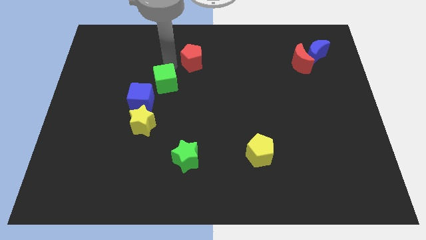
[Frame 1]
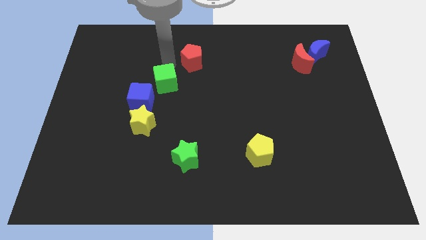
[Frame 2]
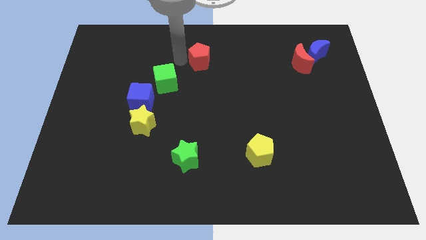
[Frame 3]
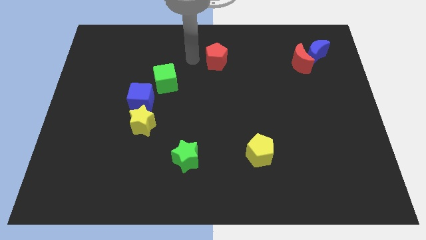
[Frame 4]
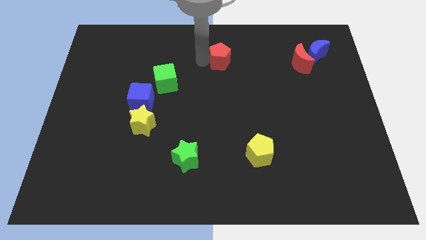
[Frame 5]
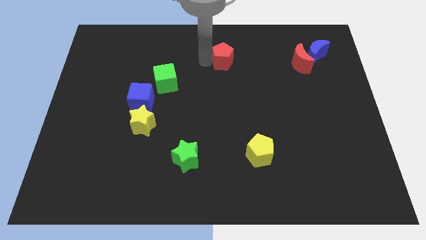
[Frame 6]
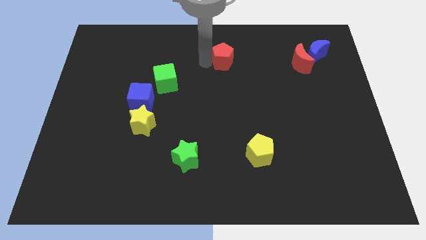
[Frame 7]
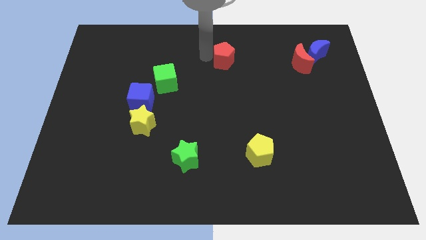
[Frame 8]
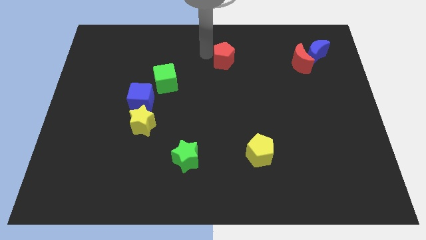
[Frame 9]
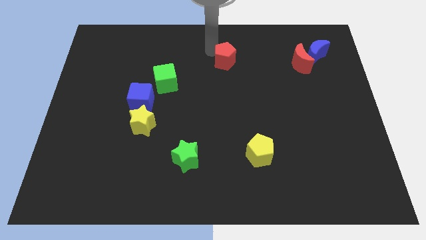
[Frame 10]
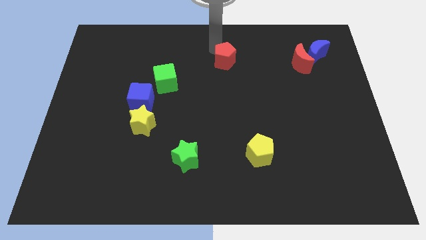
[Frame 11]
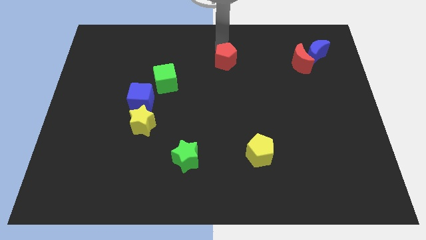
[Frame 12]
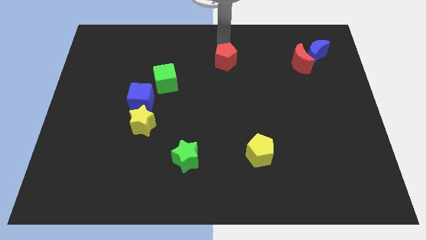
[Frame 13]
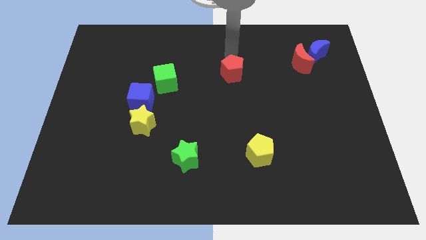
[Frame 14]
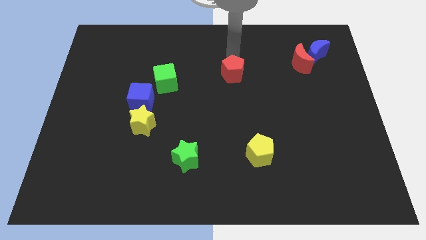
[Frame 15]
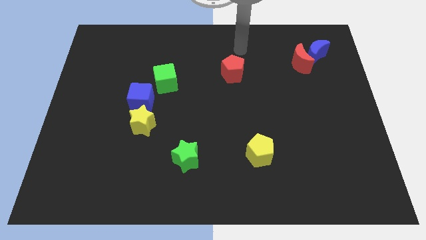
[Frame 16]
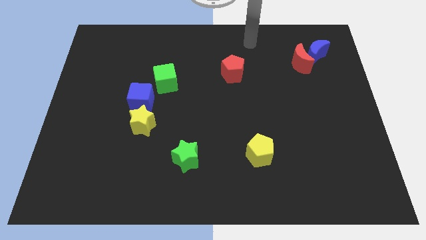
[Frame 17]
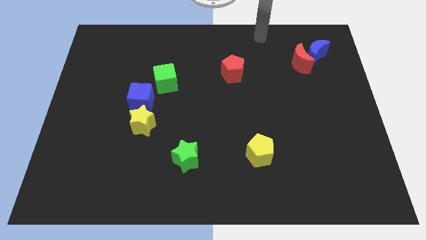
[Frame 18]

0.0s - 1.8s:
put the red pentagon between the green cube and red moon

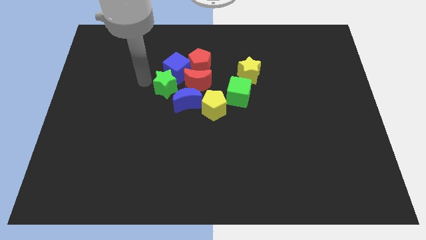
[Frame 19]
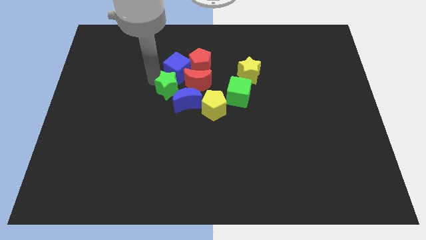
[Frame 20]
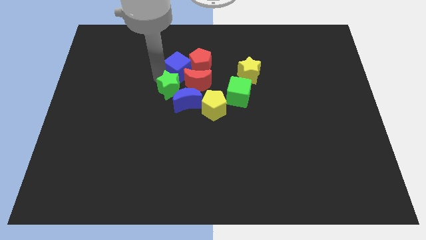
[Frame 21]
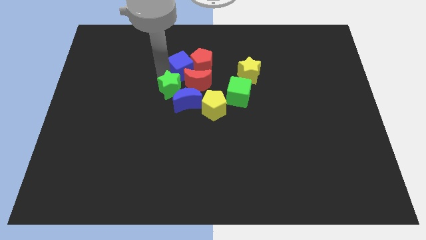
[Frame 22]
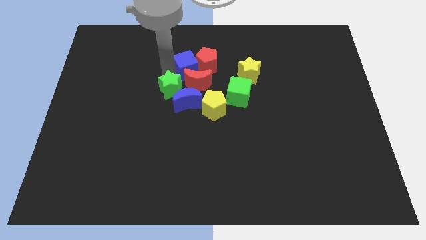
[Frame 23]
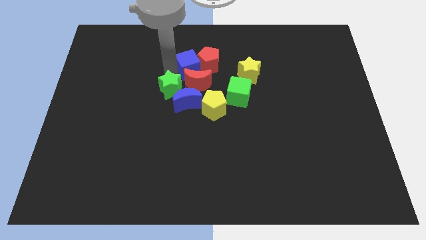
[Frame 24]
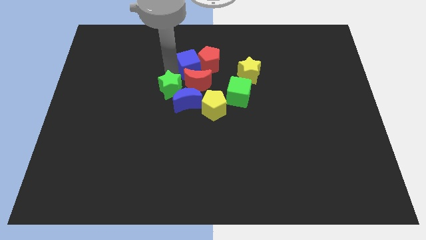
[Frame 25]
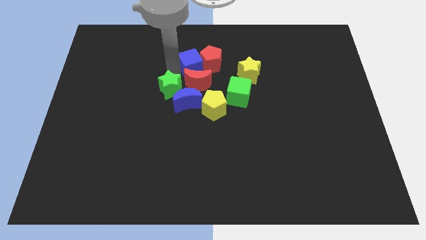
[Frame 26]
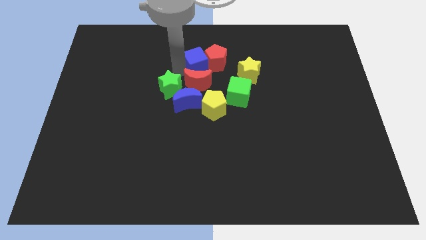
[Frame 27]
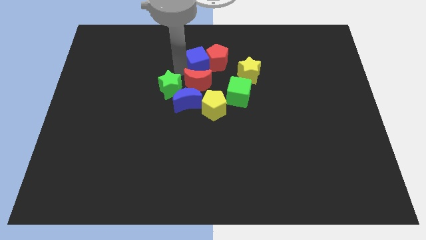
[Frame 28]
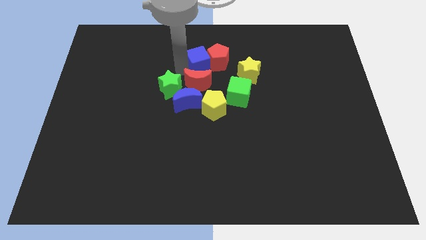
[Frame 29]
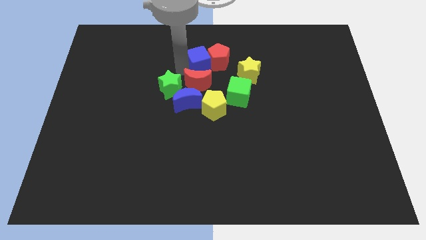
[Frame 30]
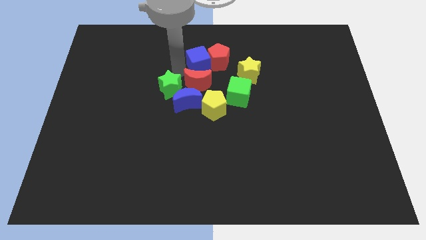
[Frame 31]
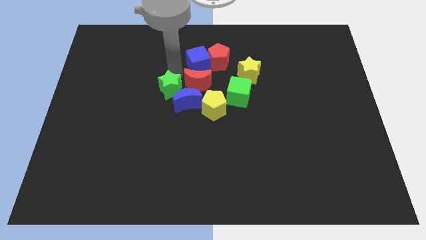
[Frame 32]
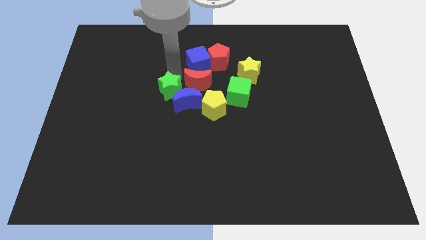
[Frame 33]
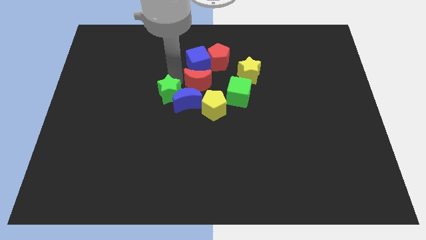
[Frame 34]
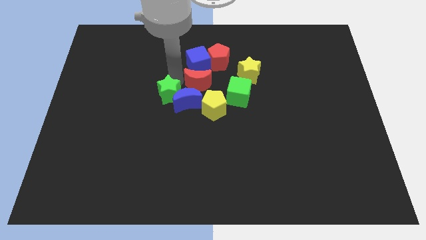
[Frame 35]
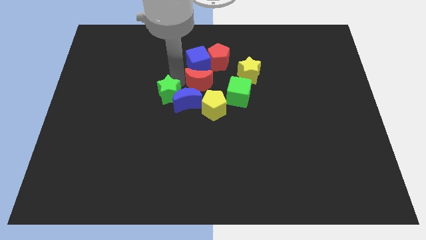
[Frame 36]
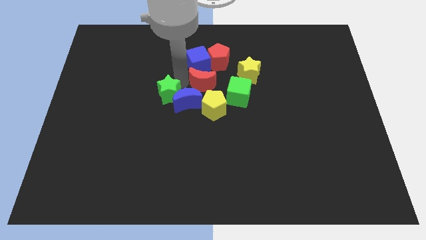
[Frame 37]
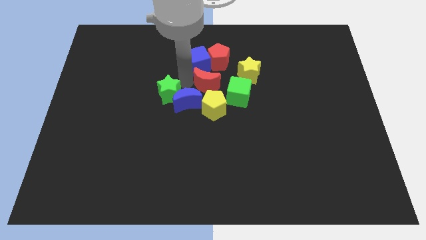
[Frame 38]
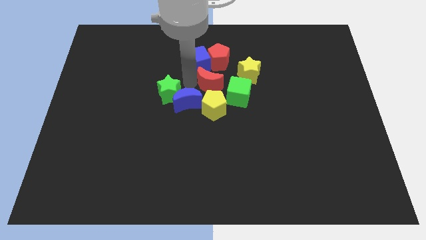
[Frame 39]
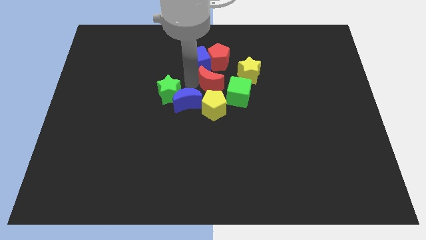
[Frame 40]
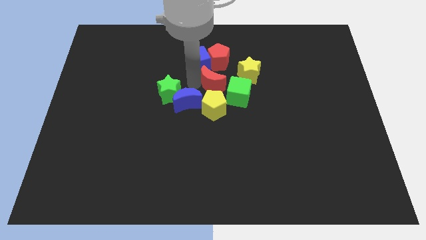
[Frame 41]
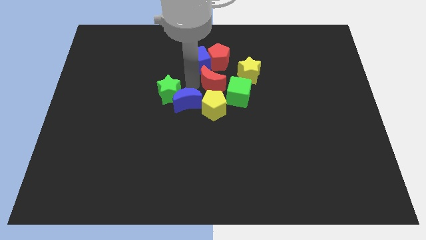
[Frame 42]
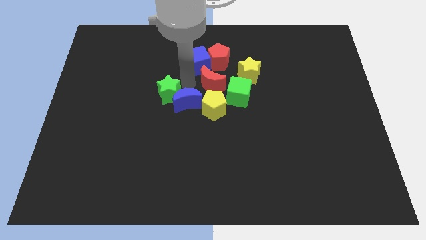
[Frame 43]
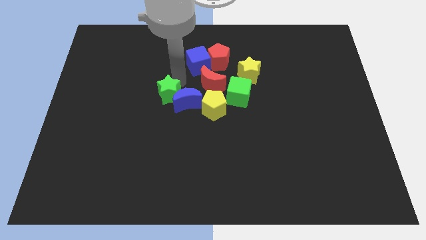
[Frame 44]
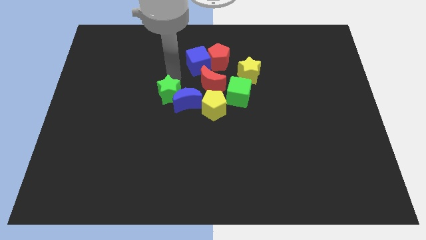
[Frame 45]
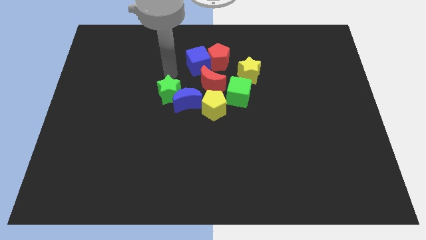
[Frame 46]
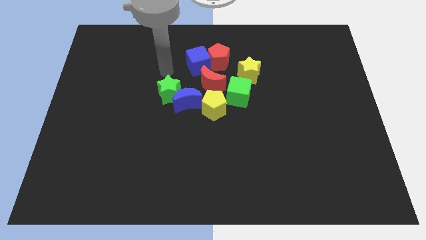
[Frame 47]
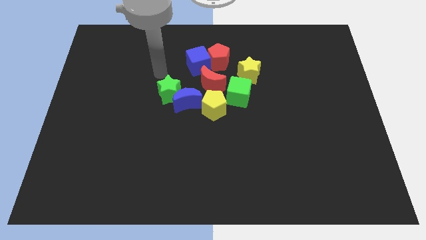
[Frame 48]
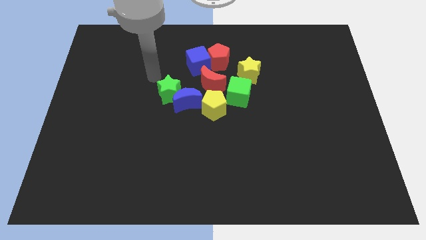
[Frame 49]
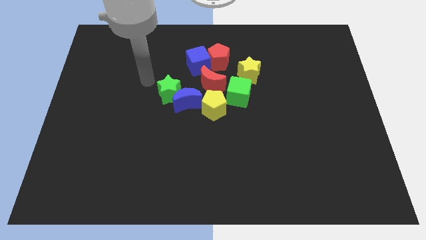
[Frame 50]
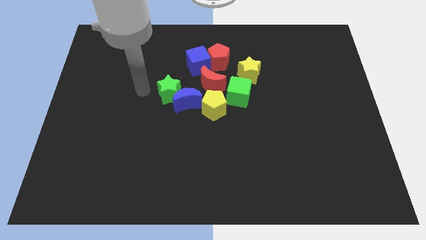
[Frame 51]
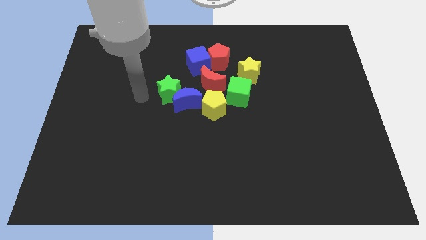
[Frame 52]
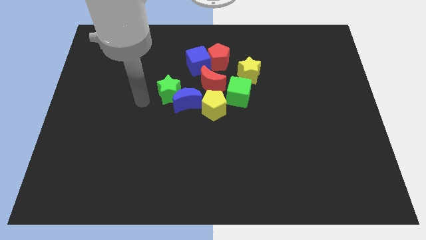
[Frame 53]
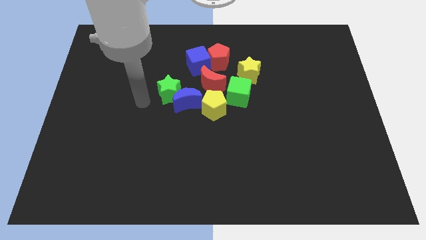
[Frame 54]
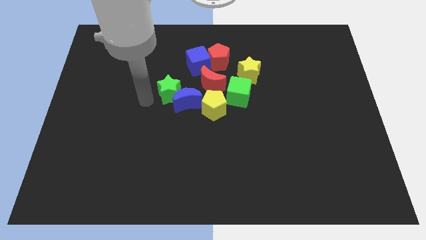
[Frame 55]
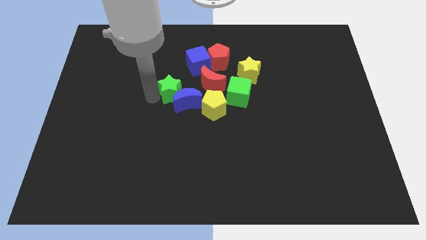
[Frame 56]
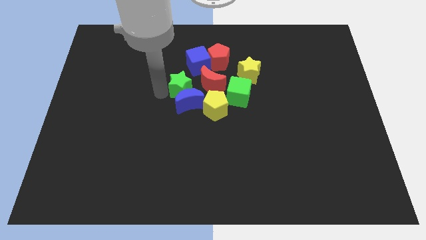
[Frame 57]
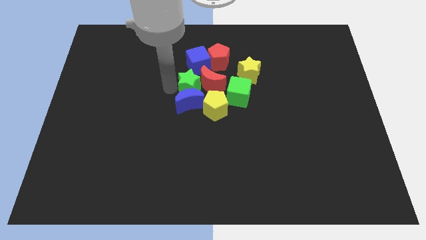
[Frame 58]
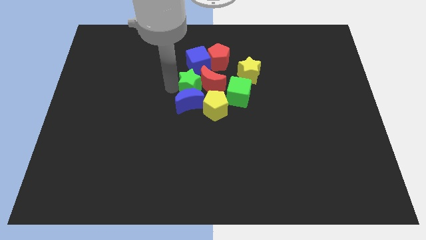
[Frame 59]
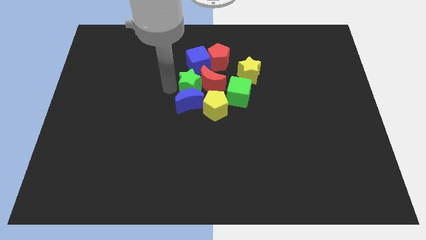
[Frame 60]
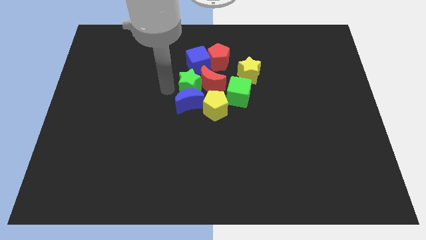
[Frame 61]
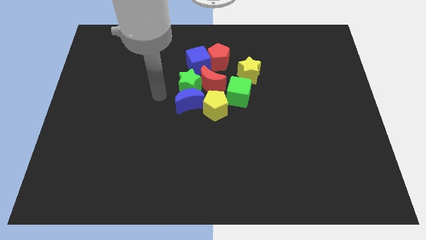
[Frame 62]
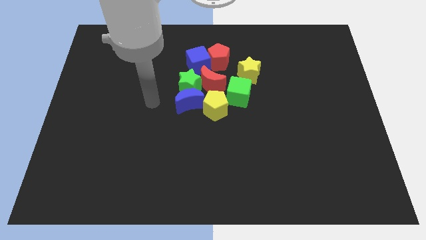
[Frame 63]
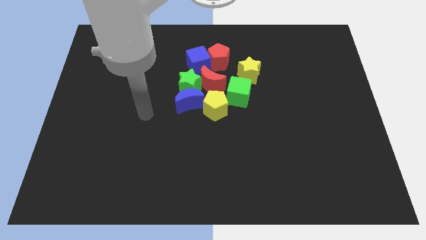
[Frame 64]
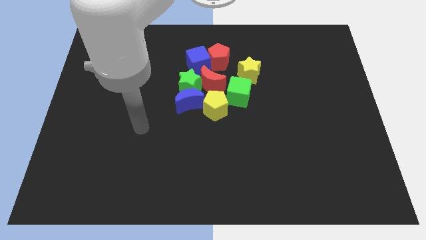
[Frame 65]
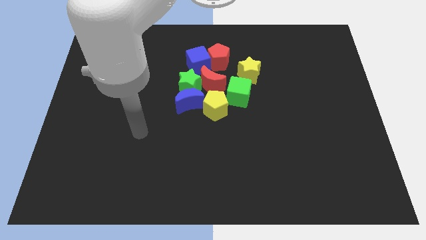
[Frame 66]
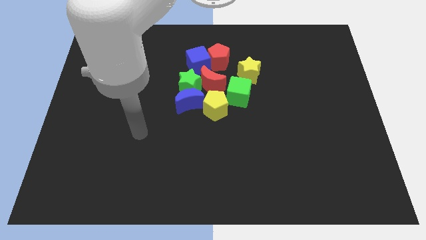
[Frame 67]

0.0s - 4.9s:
push the red moon and green star to the group of blocks

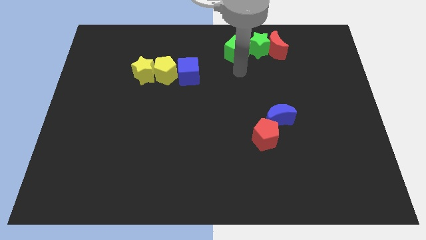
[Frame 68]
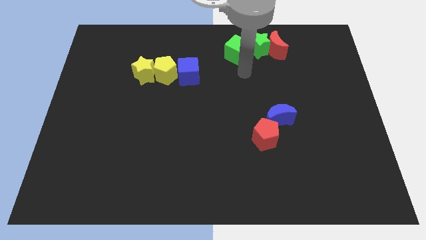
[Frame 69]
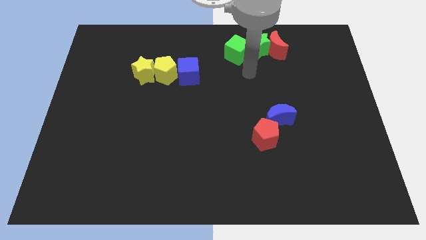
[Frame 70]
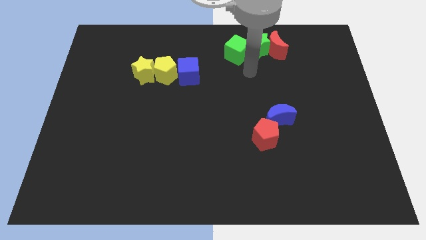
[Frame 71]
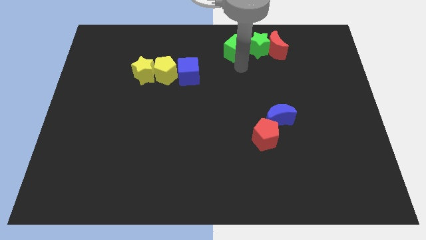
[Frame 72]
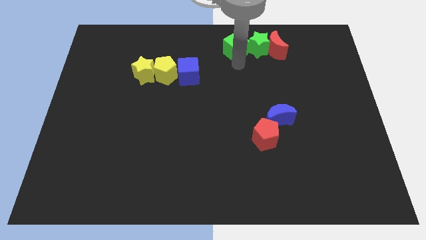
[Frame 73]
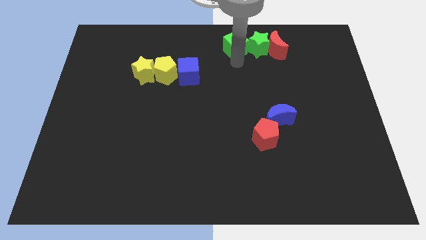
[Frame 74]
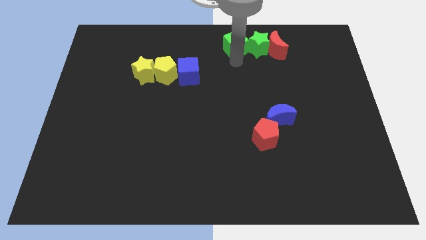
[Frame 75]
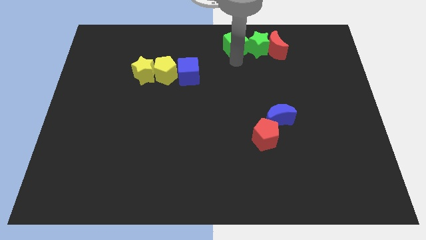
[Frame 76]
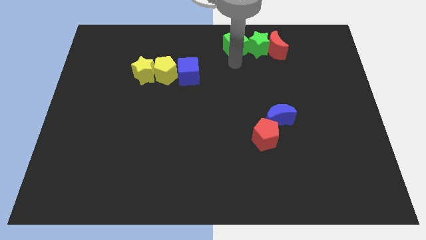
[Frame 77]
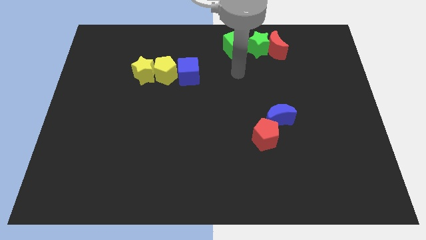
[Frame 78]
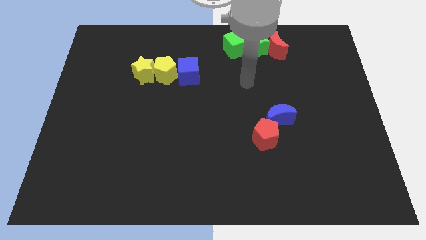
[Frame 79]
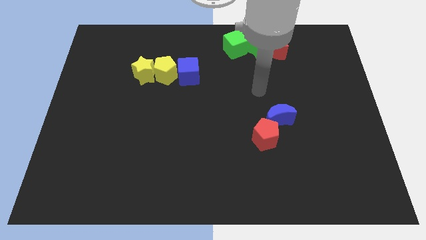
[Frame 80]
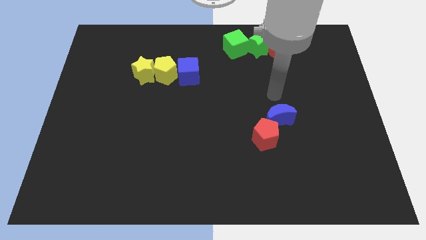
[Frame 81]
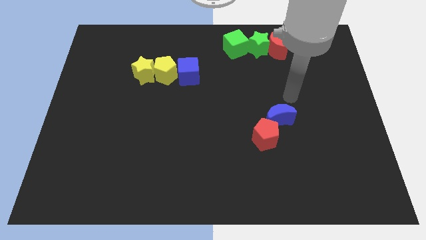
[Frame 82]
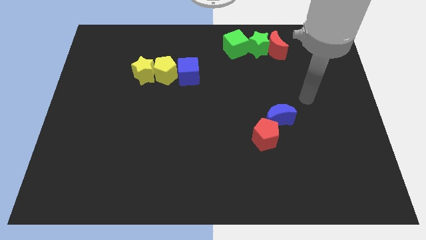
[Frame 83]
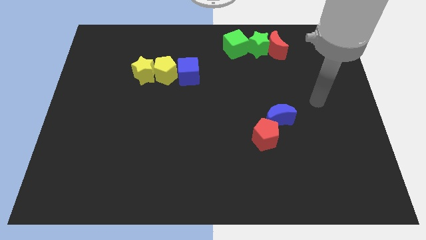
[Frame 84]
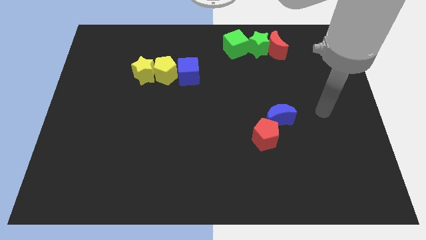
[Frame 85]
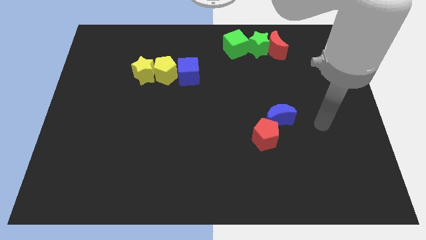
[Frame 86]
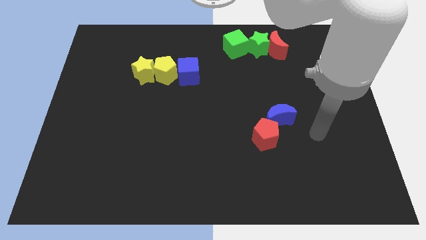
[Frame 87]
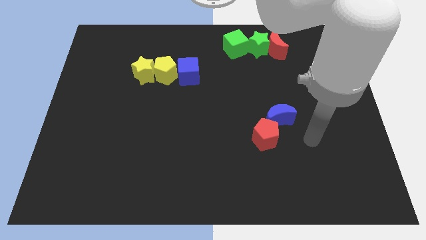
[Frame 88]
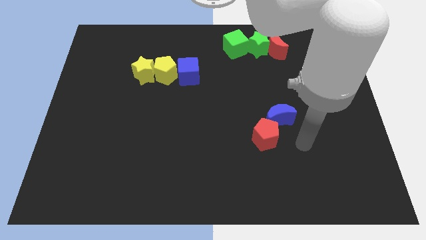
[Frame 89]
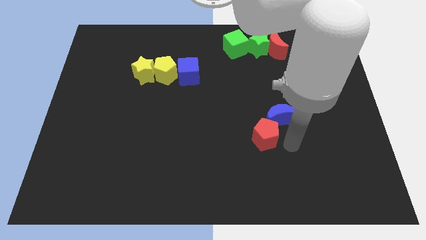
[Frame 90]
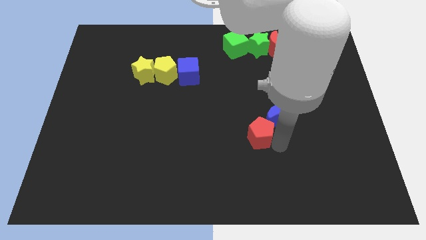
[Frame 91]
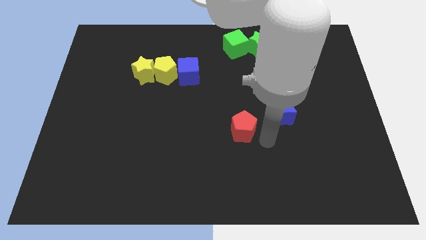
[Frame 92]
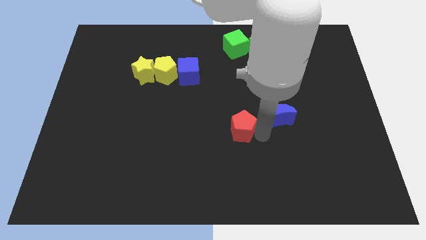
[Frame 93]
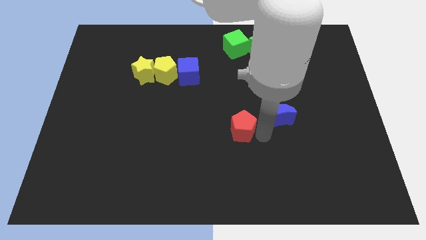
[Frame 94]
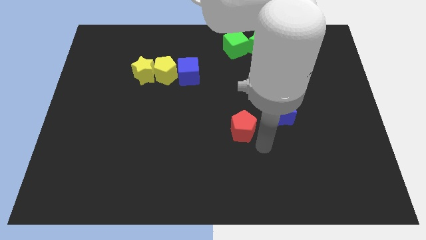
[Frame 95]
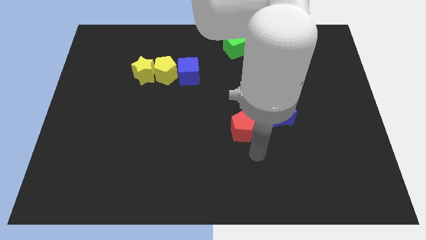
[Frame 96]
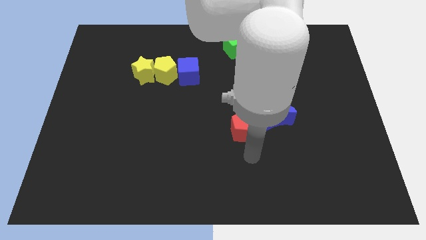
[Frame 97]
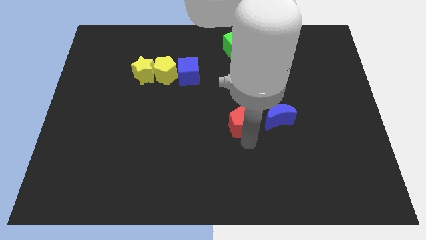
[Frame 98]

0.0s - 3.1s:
move the red pentagon to the left of blue crescent
